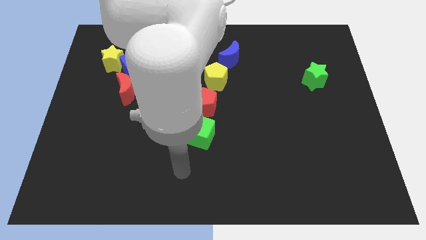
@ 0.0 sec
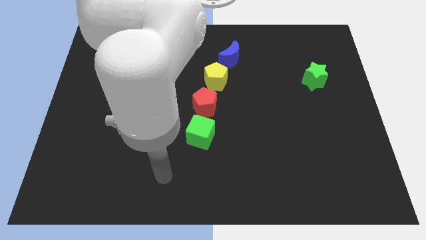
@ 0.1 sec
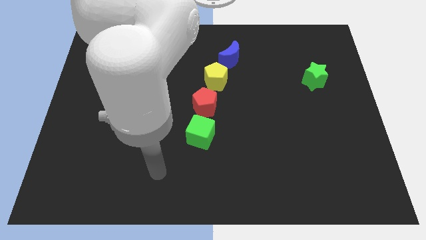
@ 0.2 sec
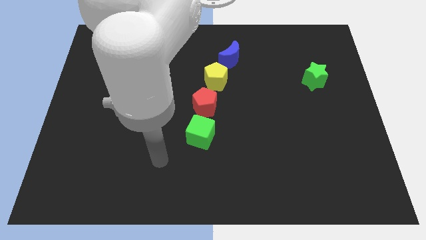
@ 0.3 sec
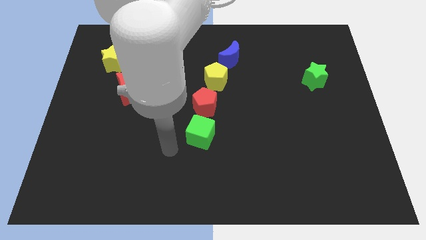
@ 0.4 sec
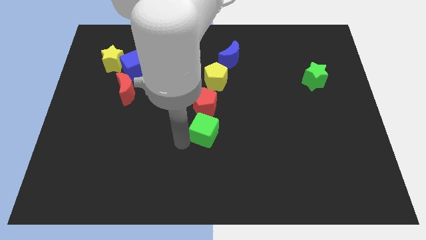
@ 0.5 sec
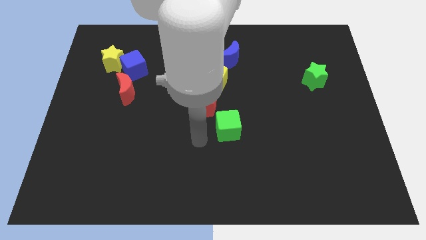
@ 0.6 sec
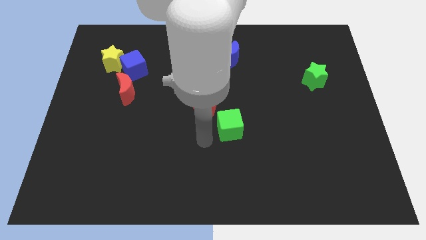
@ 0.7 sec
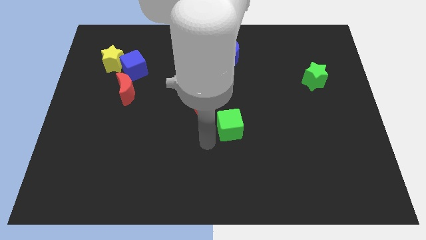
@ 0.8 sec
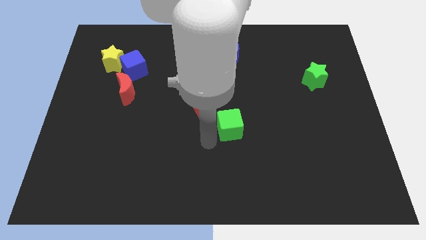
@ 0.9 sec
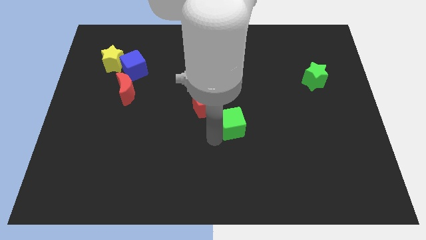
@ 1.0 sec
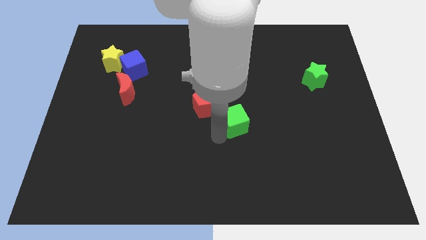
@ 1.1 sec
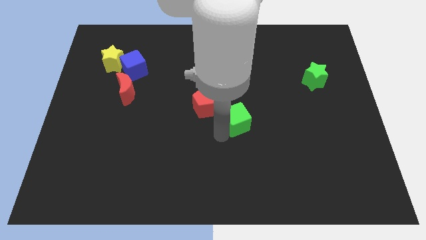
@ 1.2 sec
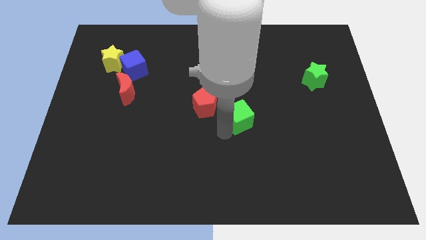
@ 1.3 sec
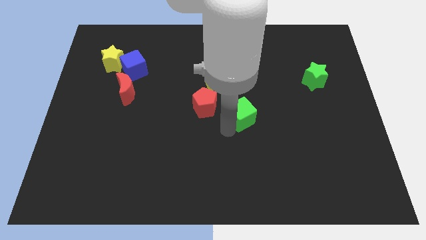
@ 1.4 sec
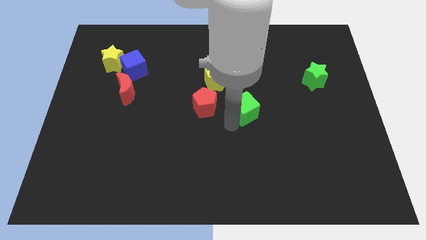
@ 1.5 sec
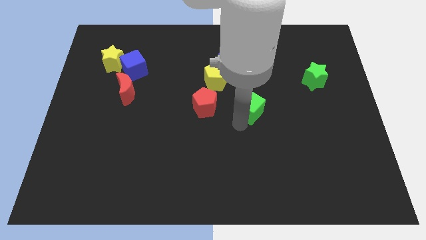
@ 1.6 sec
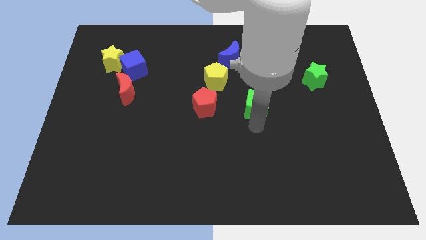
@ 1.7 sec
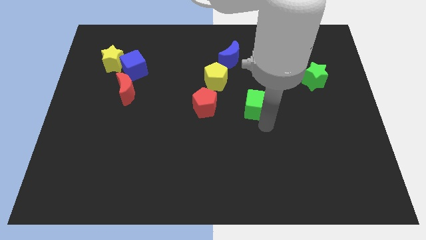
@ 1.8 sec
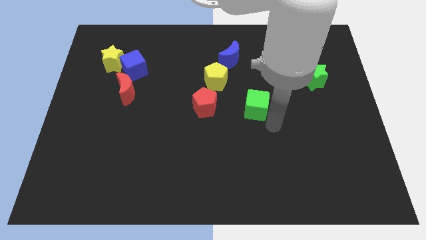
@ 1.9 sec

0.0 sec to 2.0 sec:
push the green cube parallel right to the red pentagon

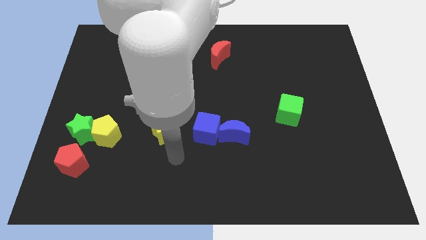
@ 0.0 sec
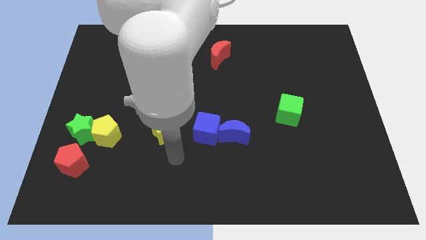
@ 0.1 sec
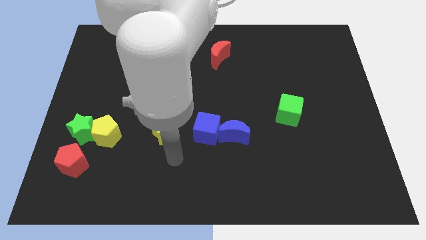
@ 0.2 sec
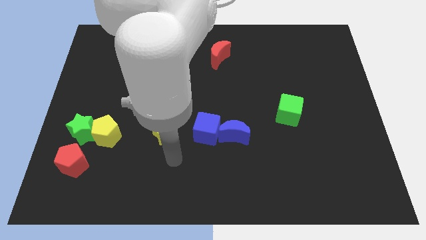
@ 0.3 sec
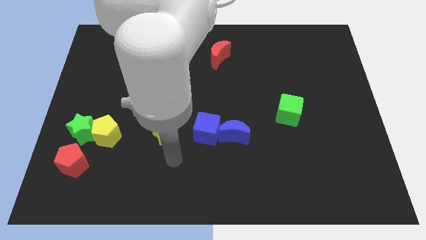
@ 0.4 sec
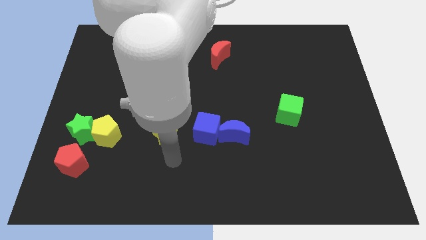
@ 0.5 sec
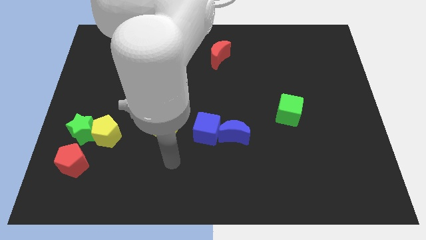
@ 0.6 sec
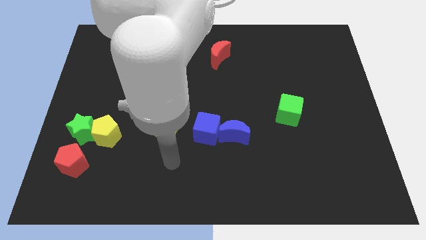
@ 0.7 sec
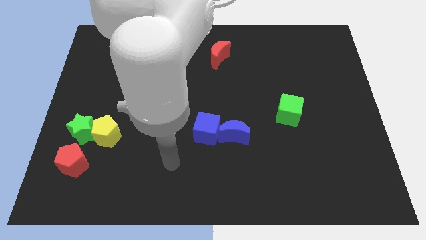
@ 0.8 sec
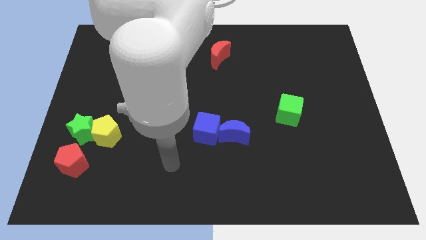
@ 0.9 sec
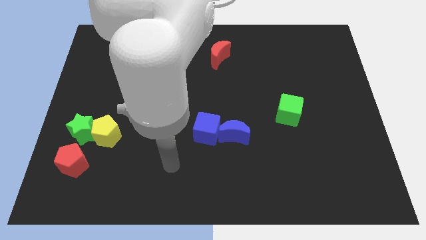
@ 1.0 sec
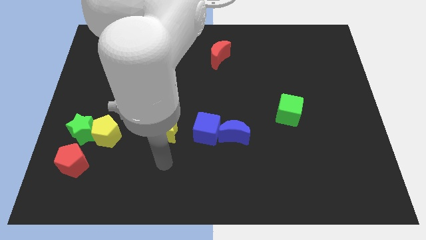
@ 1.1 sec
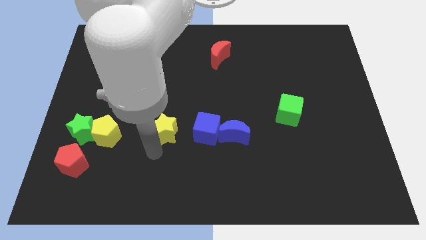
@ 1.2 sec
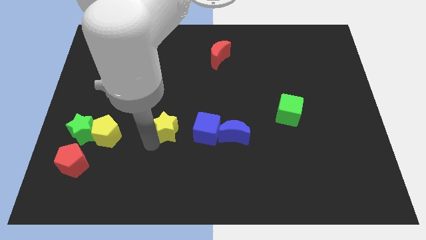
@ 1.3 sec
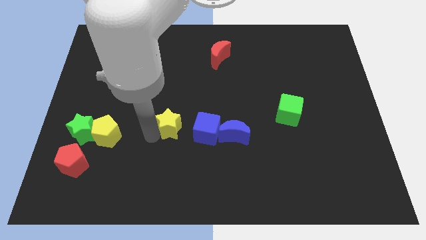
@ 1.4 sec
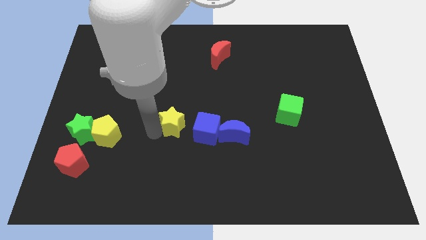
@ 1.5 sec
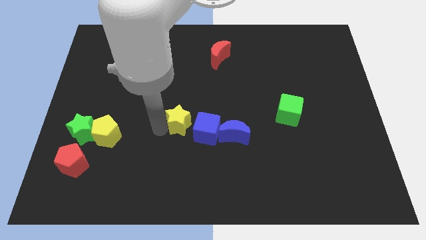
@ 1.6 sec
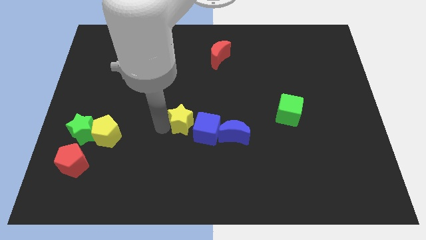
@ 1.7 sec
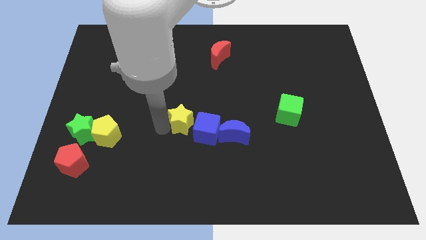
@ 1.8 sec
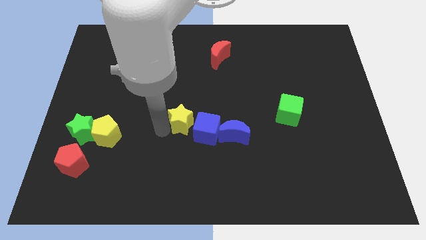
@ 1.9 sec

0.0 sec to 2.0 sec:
slightly push the yellow star into blue cube to the left

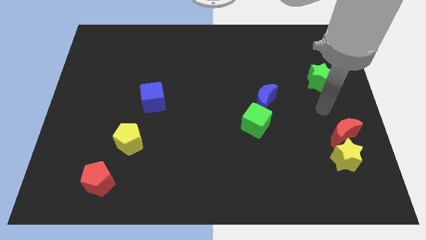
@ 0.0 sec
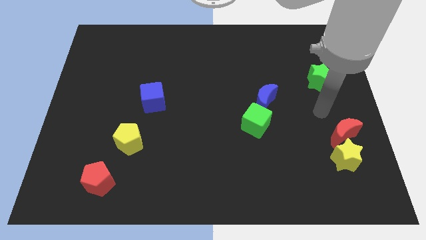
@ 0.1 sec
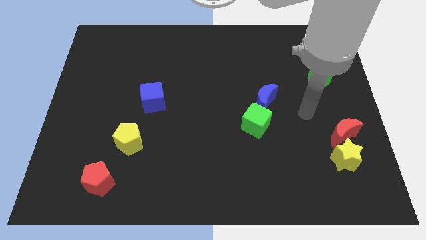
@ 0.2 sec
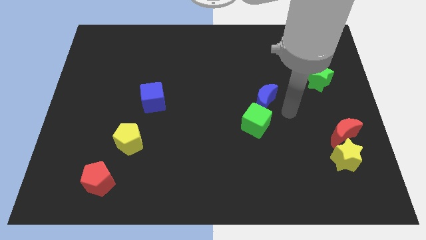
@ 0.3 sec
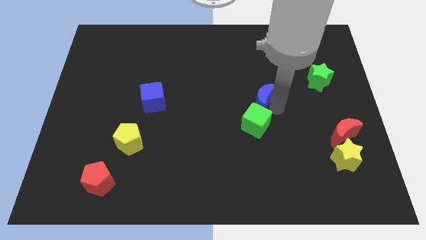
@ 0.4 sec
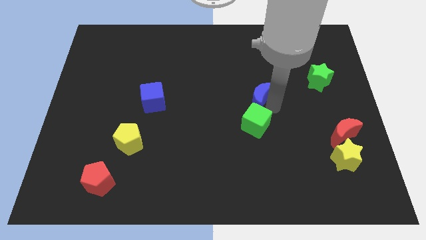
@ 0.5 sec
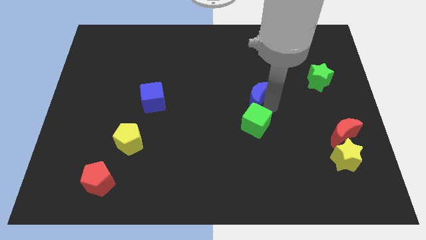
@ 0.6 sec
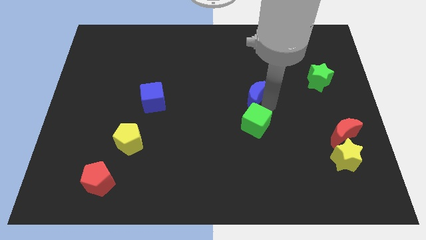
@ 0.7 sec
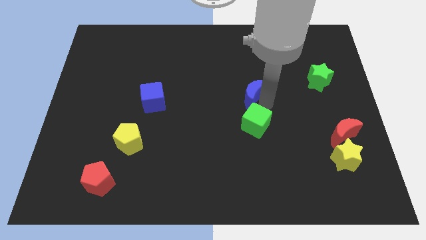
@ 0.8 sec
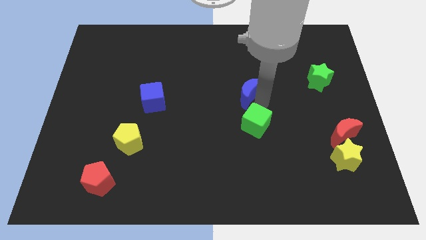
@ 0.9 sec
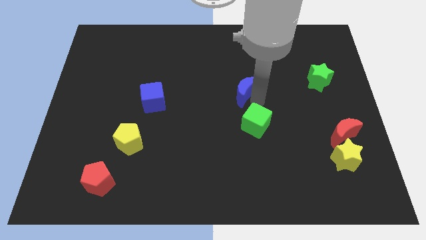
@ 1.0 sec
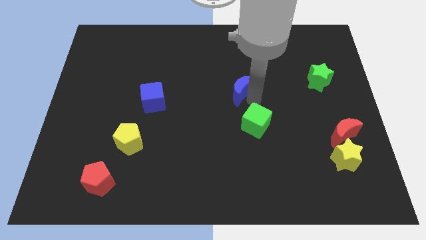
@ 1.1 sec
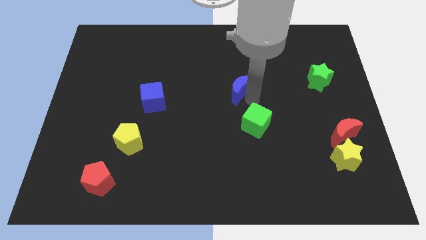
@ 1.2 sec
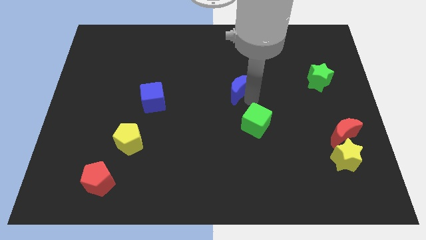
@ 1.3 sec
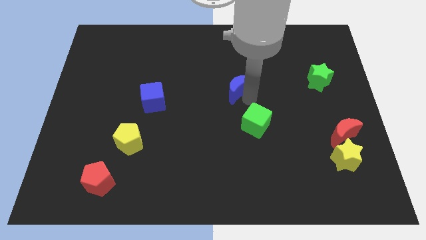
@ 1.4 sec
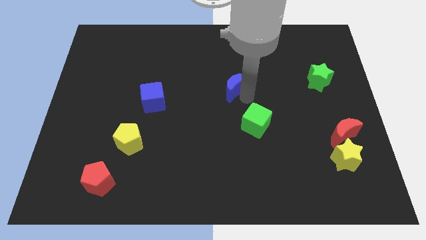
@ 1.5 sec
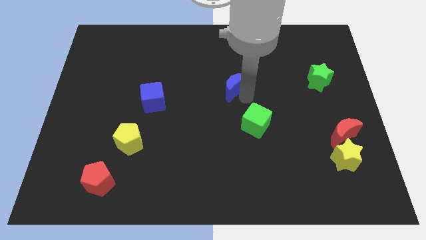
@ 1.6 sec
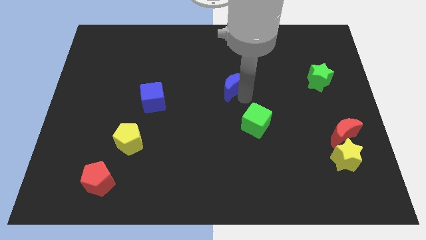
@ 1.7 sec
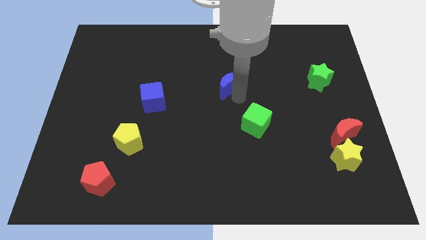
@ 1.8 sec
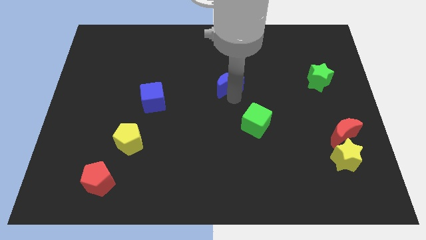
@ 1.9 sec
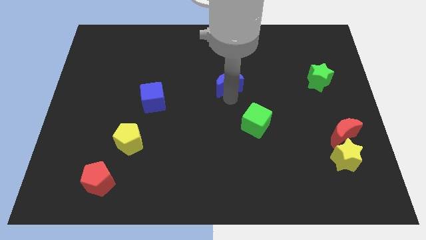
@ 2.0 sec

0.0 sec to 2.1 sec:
separate the blue crescent from the green cube

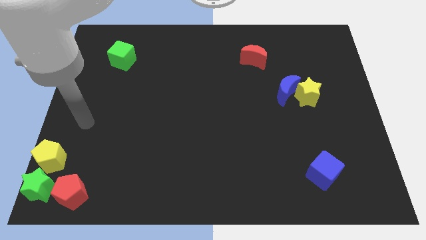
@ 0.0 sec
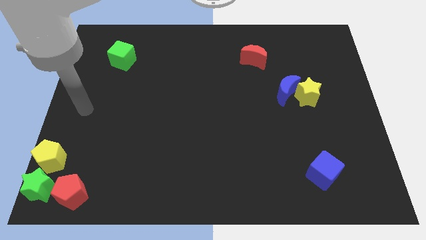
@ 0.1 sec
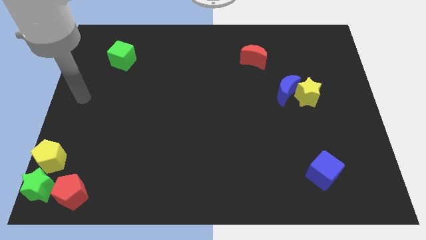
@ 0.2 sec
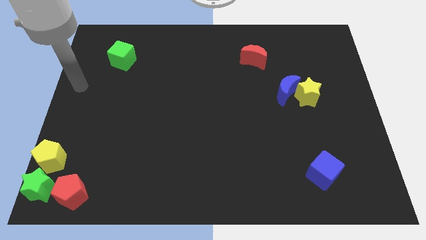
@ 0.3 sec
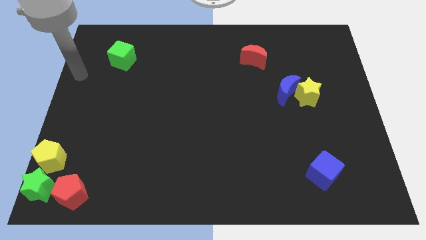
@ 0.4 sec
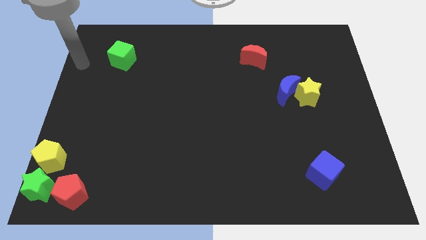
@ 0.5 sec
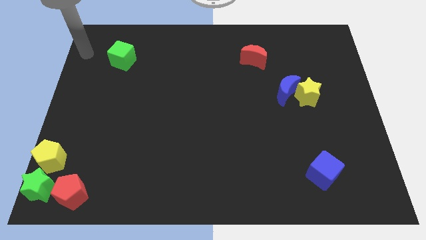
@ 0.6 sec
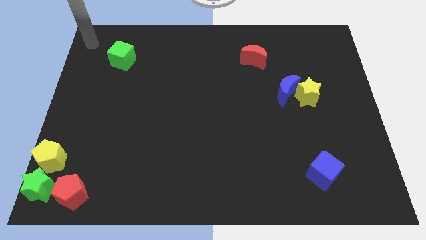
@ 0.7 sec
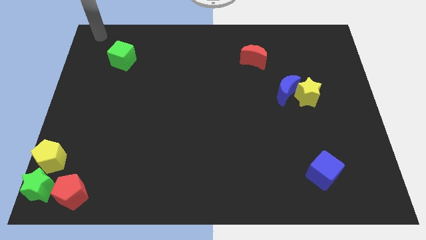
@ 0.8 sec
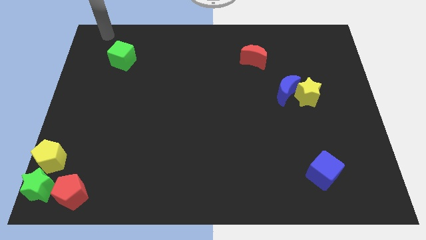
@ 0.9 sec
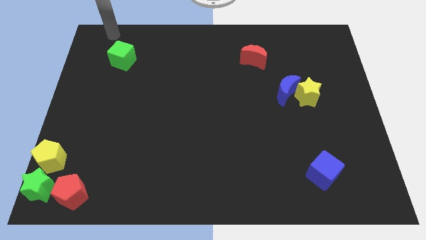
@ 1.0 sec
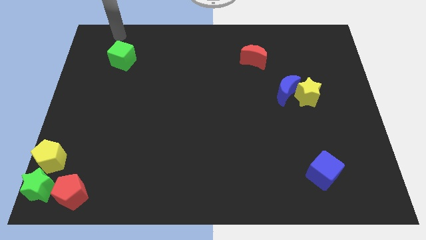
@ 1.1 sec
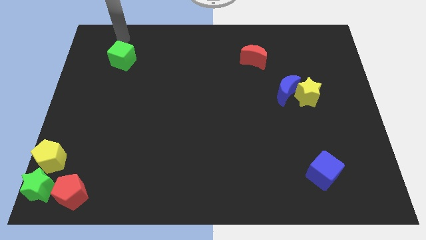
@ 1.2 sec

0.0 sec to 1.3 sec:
place your hand above the green cube

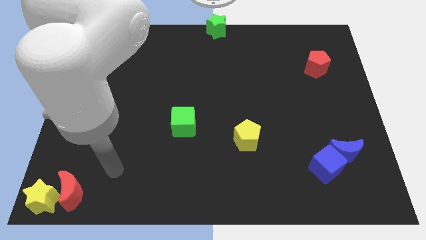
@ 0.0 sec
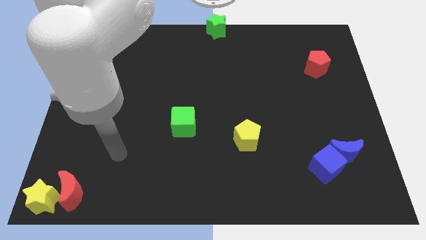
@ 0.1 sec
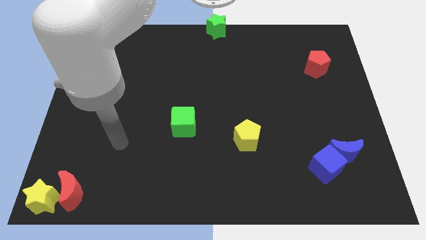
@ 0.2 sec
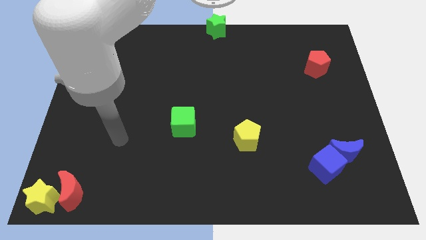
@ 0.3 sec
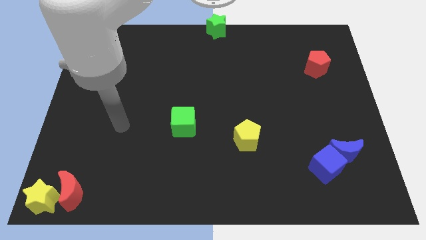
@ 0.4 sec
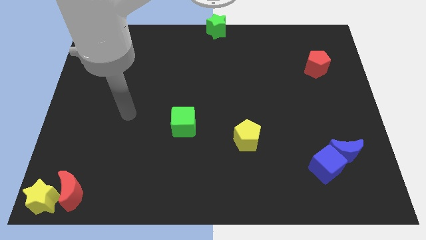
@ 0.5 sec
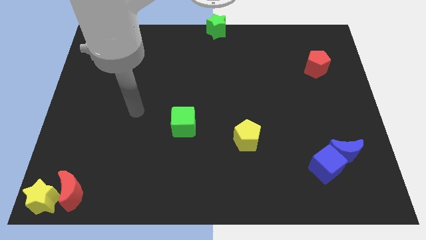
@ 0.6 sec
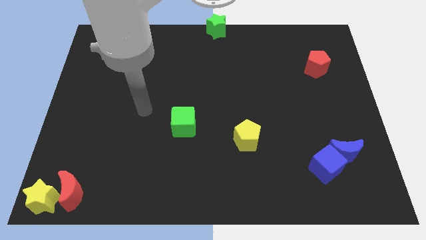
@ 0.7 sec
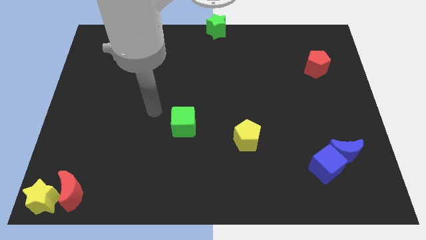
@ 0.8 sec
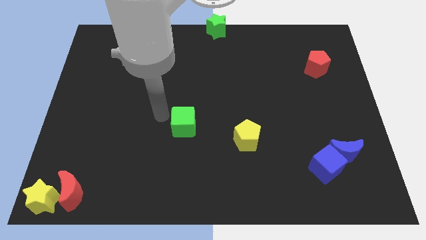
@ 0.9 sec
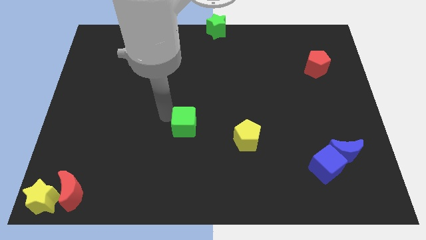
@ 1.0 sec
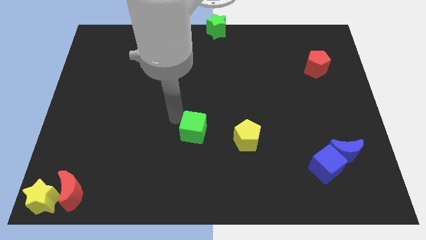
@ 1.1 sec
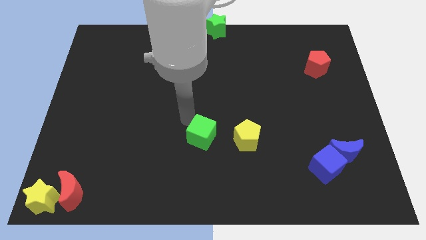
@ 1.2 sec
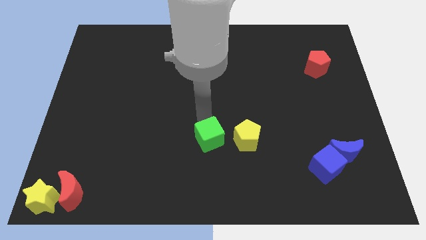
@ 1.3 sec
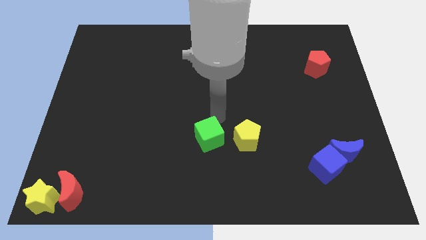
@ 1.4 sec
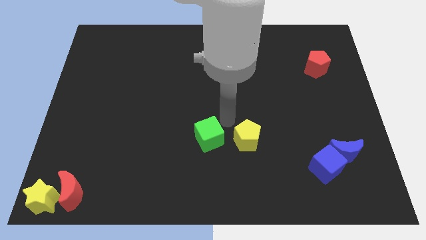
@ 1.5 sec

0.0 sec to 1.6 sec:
go and push the green cube towards the yellow pentagon
